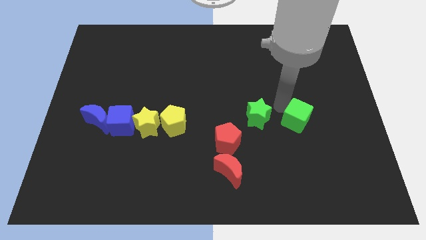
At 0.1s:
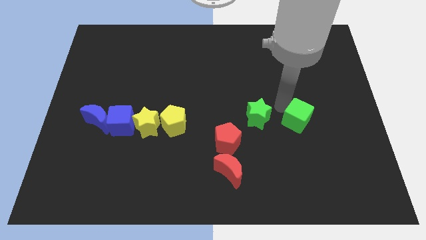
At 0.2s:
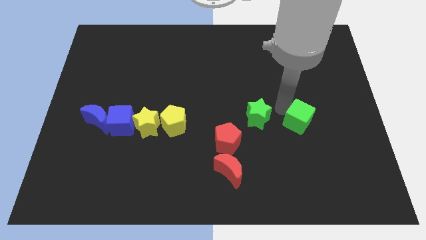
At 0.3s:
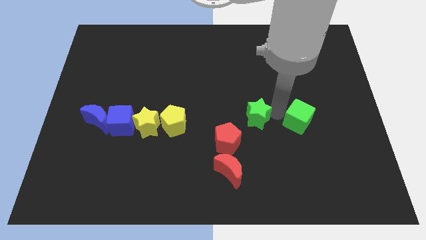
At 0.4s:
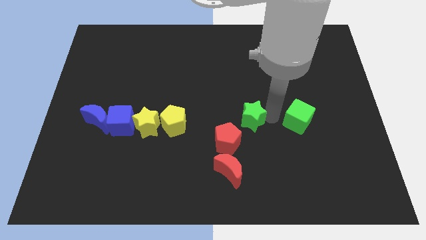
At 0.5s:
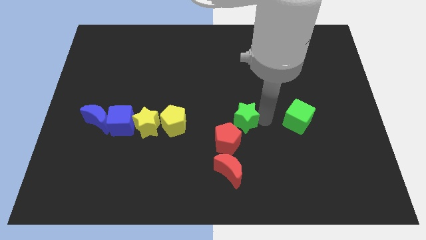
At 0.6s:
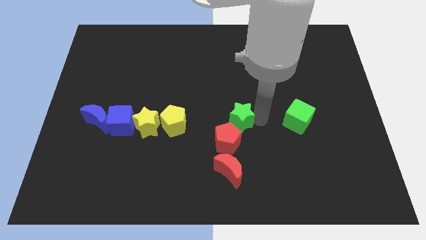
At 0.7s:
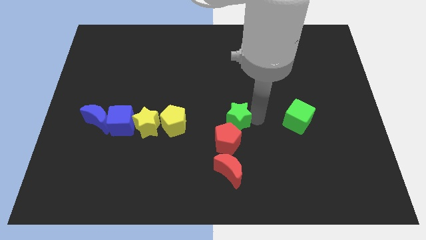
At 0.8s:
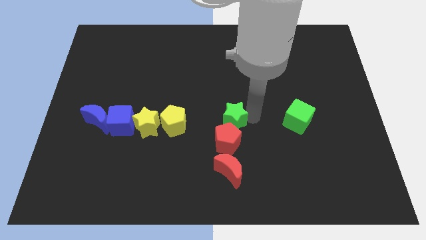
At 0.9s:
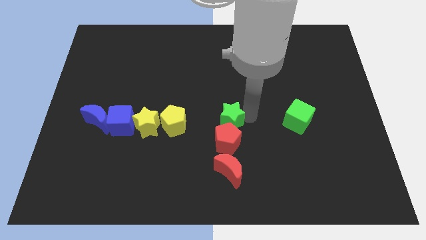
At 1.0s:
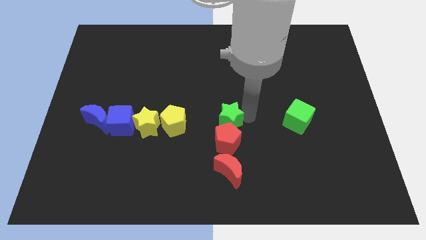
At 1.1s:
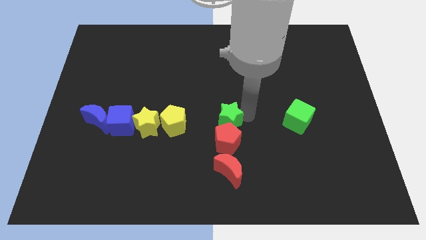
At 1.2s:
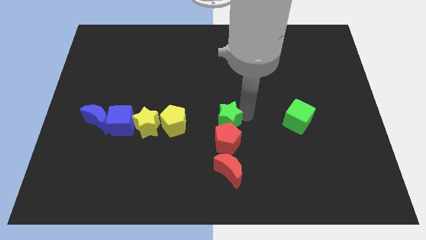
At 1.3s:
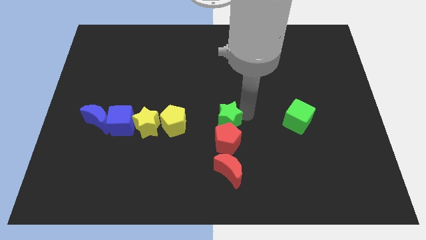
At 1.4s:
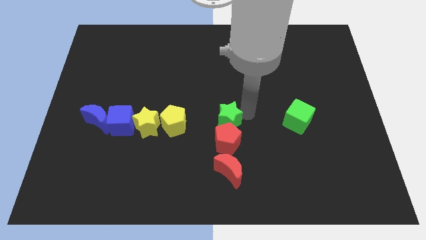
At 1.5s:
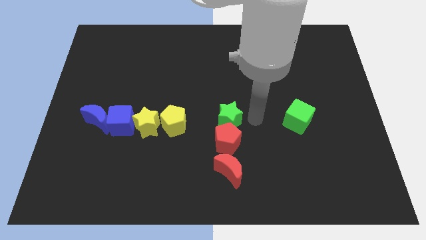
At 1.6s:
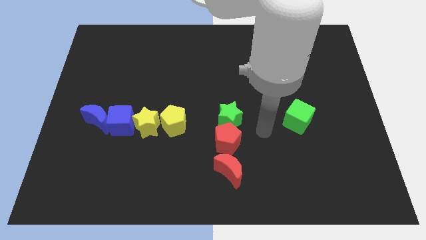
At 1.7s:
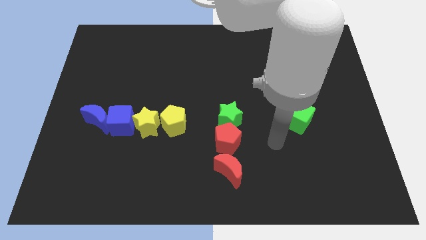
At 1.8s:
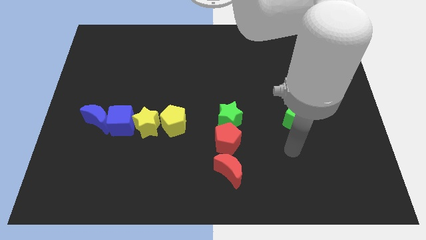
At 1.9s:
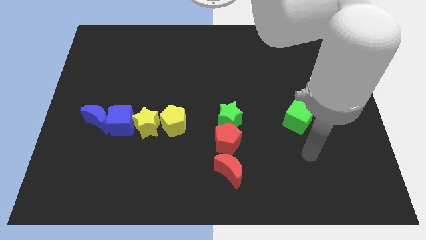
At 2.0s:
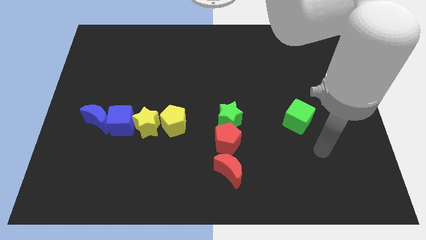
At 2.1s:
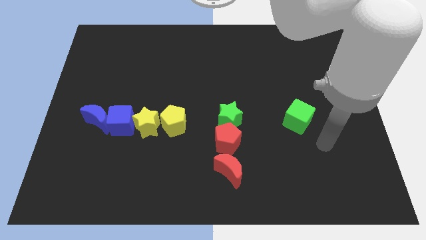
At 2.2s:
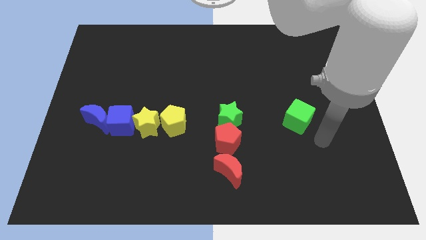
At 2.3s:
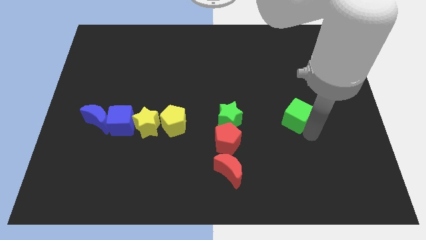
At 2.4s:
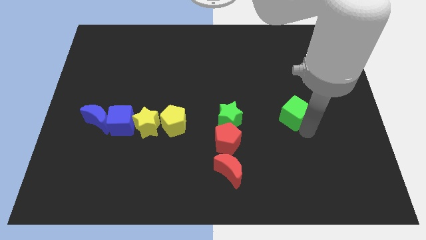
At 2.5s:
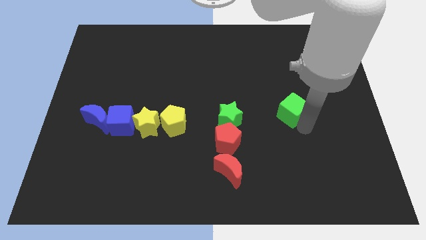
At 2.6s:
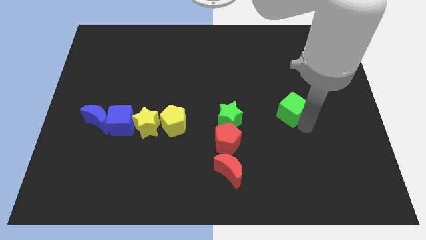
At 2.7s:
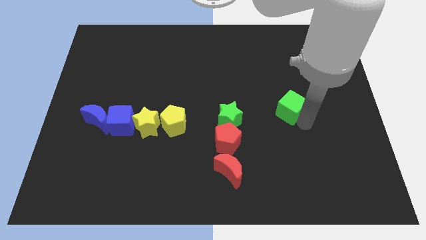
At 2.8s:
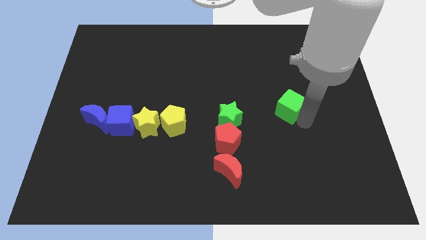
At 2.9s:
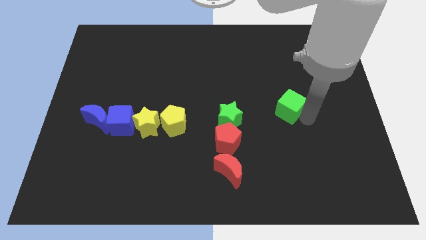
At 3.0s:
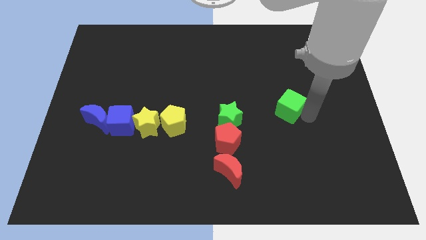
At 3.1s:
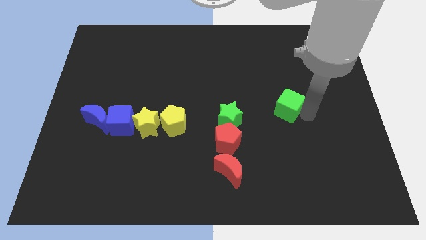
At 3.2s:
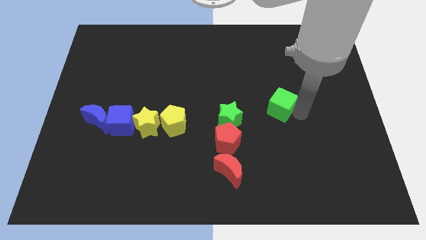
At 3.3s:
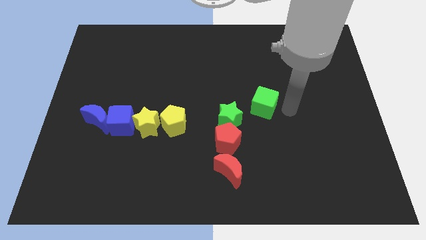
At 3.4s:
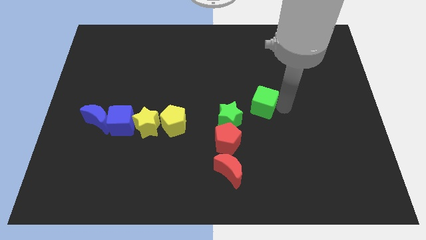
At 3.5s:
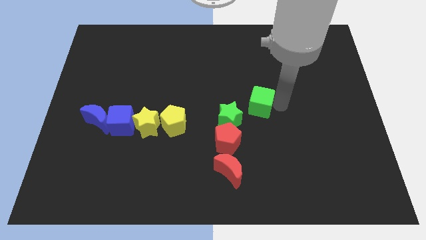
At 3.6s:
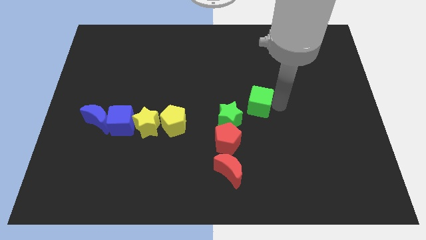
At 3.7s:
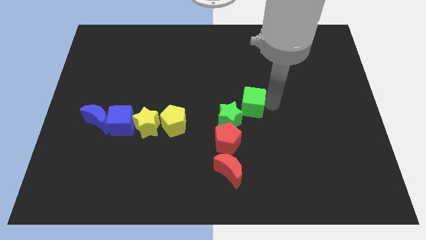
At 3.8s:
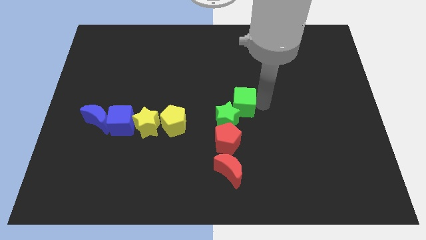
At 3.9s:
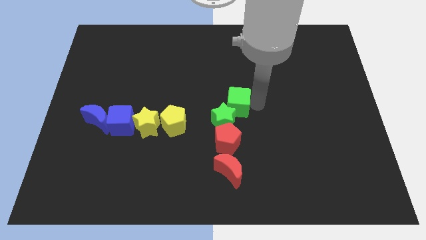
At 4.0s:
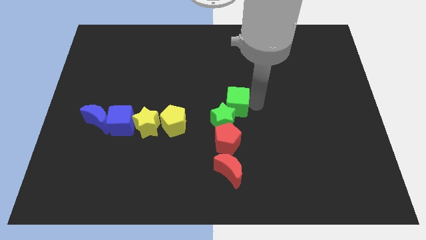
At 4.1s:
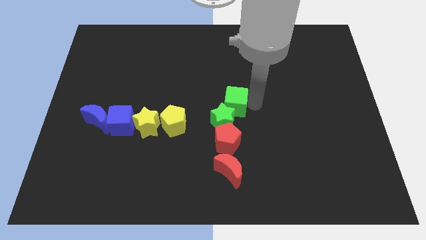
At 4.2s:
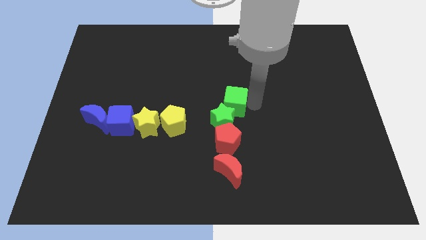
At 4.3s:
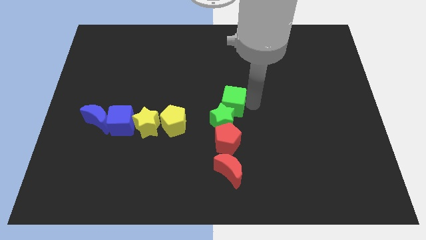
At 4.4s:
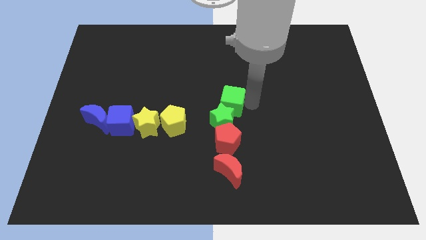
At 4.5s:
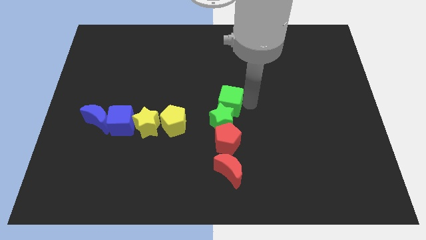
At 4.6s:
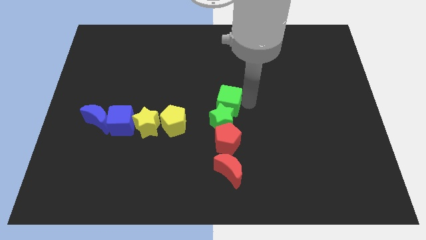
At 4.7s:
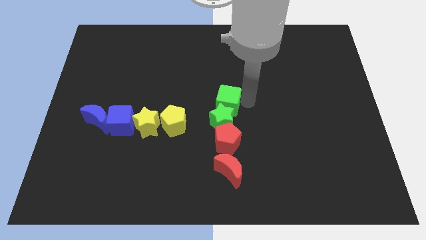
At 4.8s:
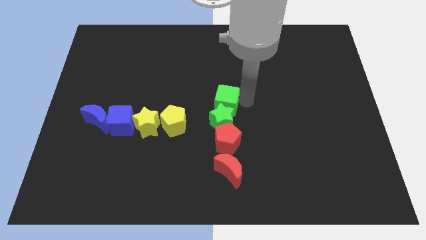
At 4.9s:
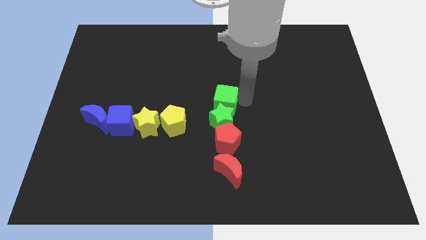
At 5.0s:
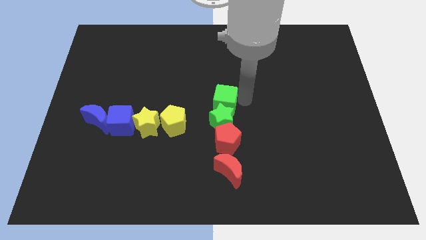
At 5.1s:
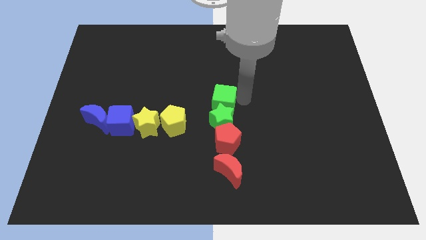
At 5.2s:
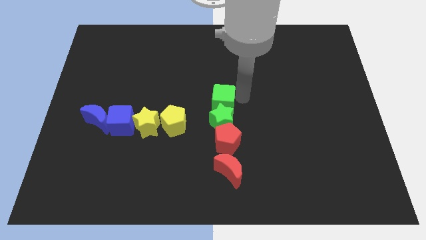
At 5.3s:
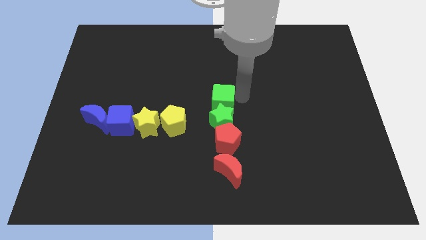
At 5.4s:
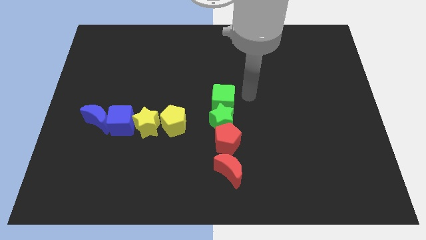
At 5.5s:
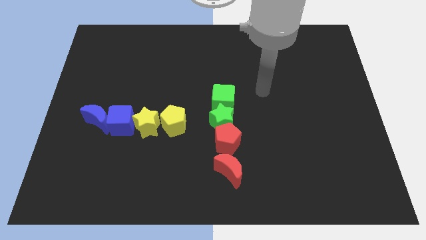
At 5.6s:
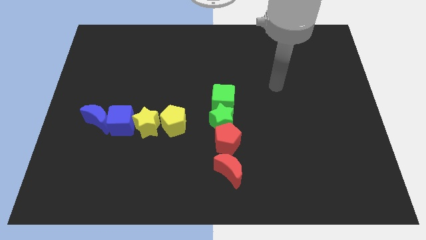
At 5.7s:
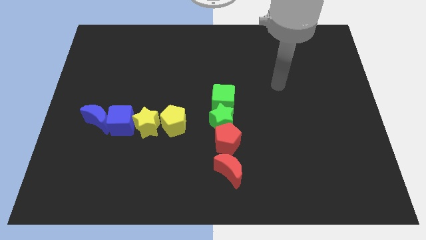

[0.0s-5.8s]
arrange the green star along with green cube above the red pentagon

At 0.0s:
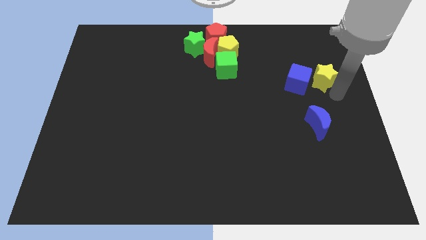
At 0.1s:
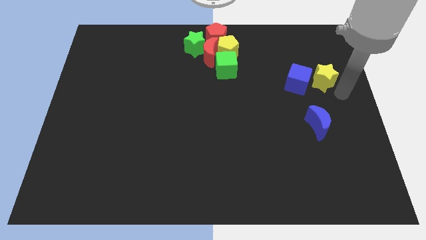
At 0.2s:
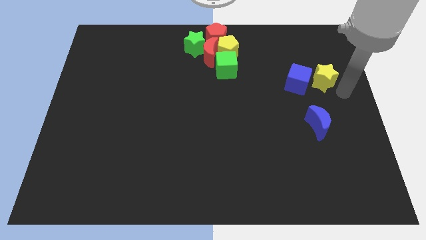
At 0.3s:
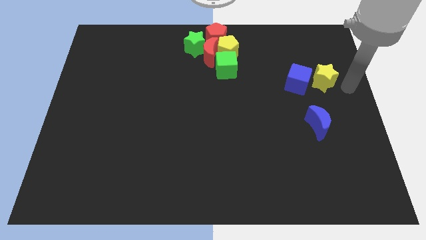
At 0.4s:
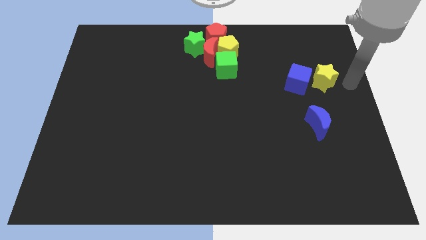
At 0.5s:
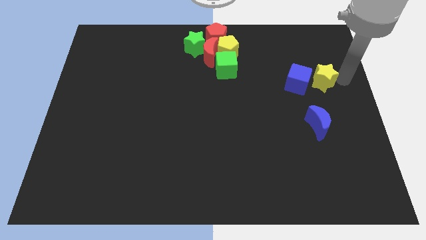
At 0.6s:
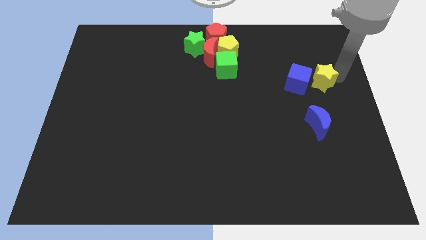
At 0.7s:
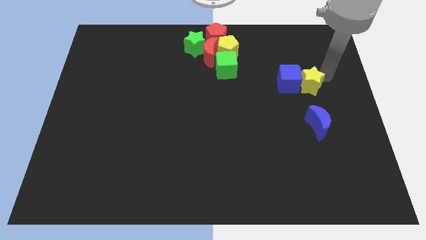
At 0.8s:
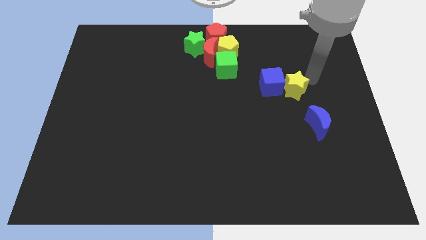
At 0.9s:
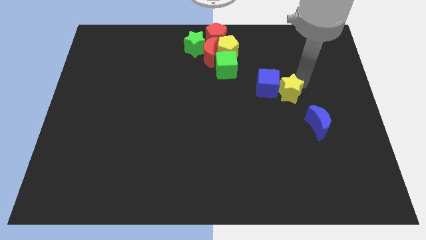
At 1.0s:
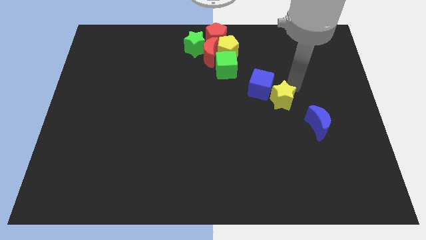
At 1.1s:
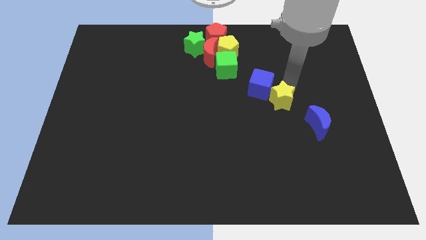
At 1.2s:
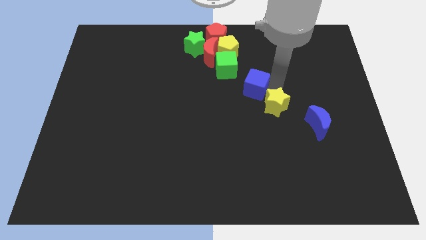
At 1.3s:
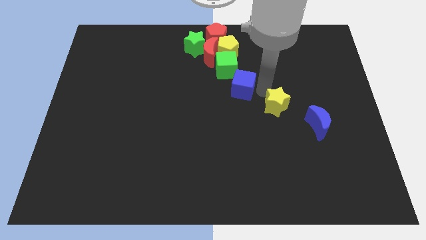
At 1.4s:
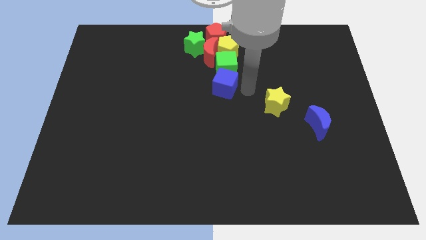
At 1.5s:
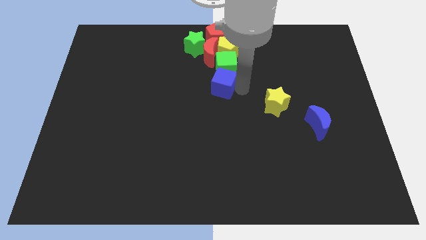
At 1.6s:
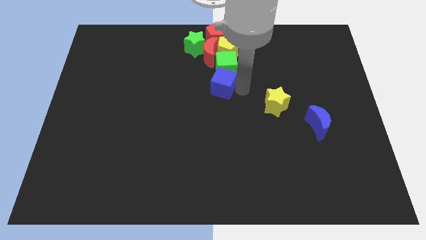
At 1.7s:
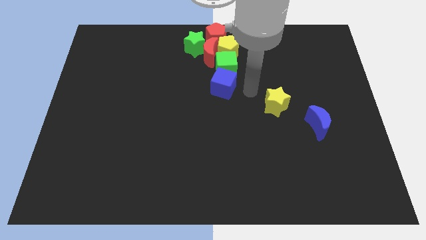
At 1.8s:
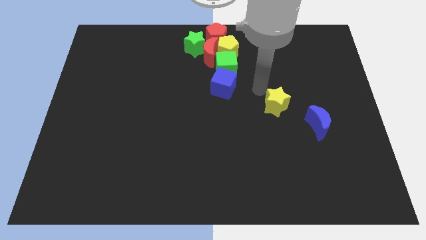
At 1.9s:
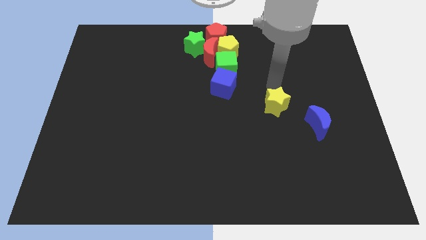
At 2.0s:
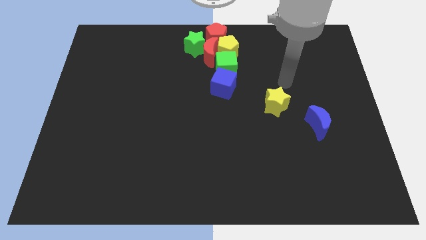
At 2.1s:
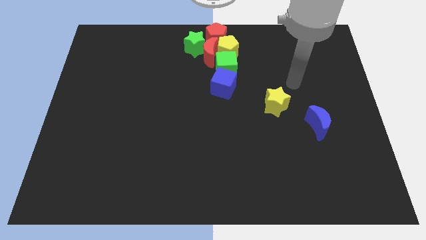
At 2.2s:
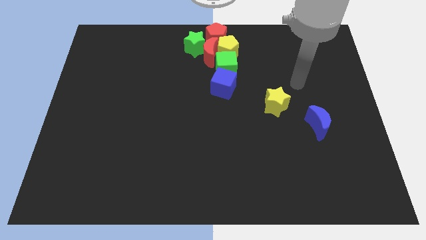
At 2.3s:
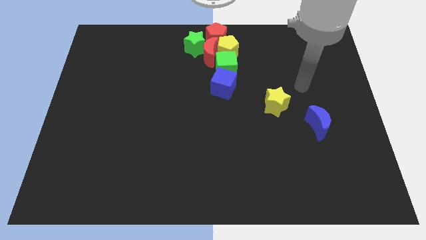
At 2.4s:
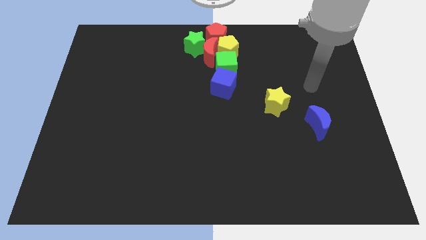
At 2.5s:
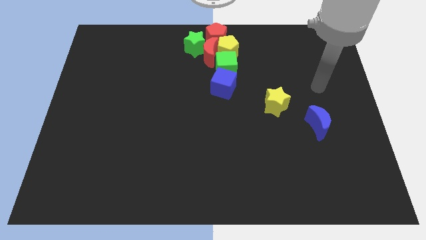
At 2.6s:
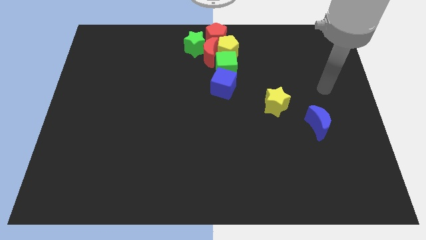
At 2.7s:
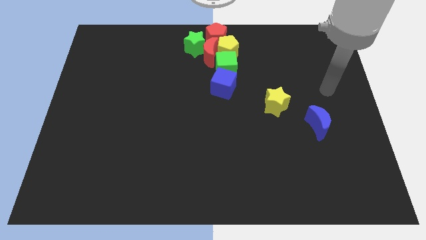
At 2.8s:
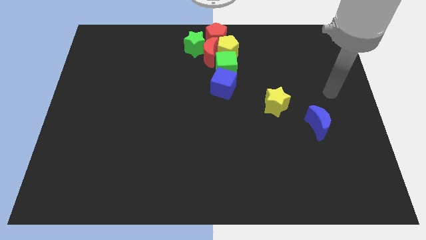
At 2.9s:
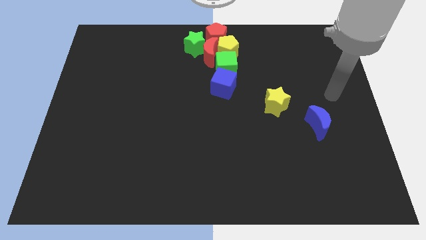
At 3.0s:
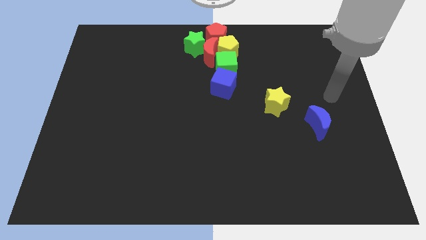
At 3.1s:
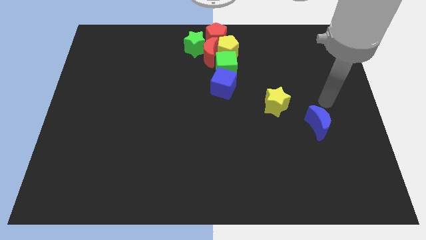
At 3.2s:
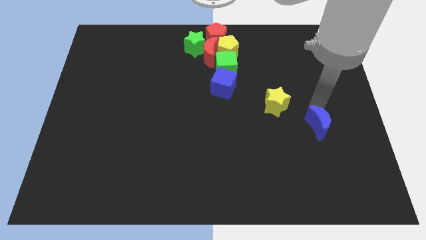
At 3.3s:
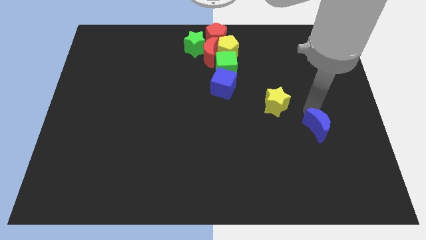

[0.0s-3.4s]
push the blue cube to the bottom of green cube
